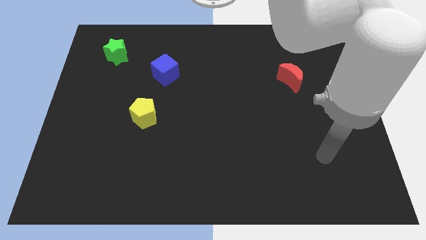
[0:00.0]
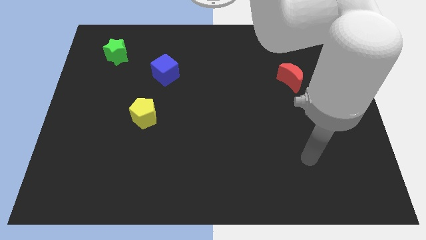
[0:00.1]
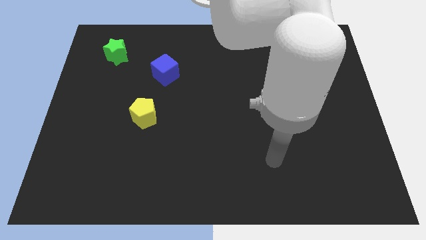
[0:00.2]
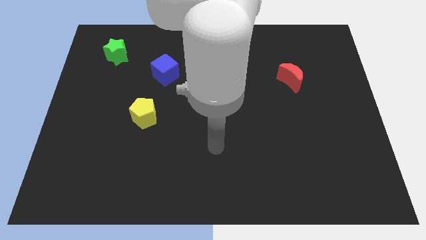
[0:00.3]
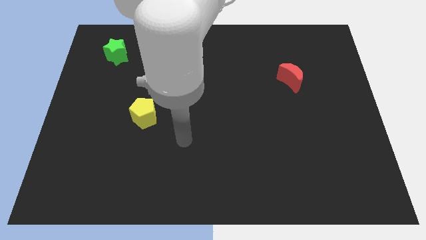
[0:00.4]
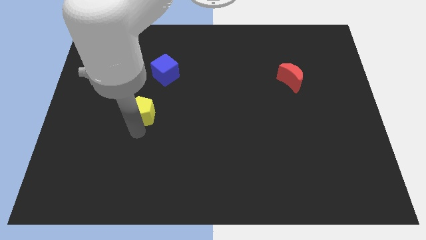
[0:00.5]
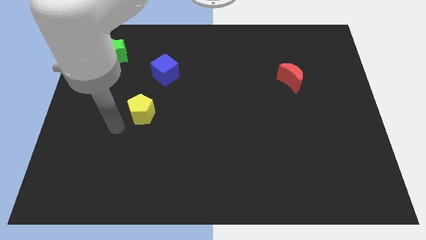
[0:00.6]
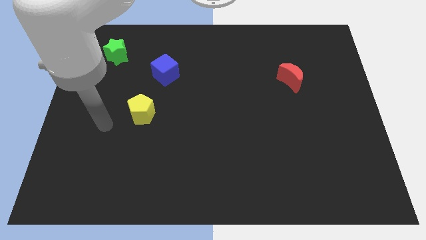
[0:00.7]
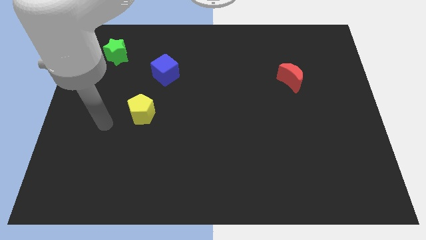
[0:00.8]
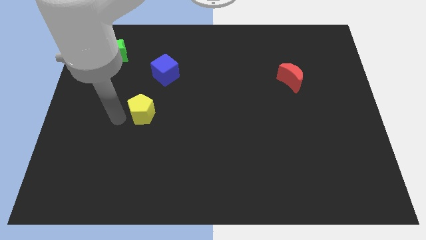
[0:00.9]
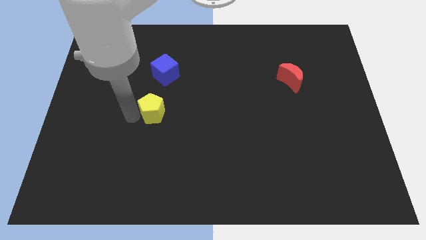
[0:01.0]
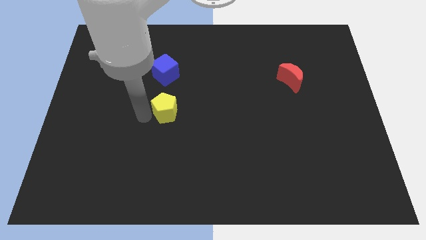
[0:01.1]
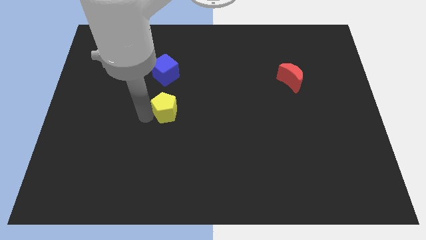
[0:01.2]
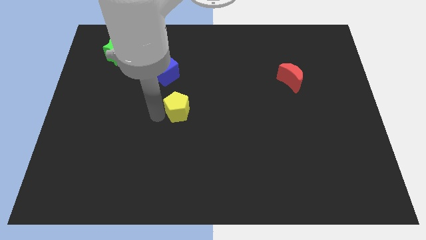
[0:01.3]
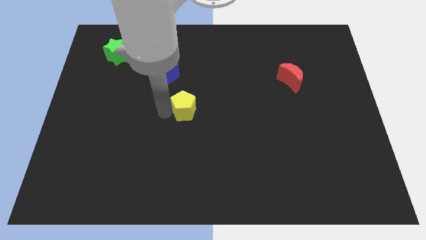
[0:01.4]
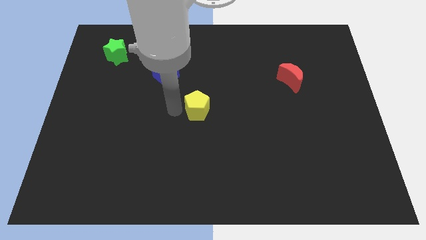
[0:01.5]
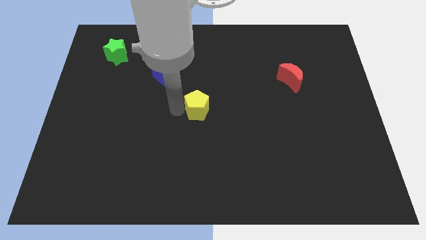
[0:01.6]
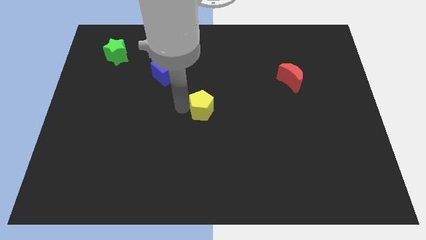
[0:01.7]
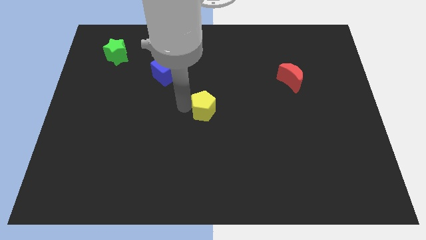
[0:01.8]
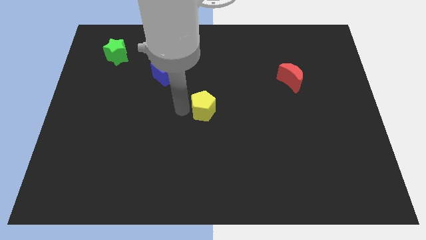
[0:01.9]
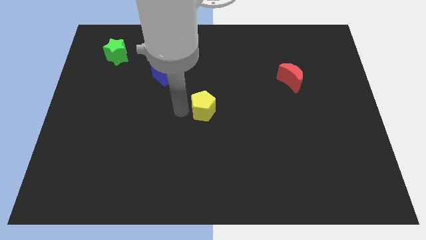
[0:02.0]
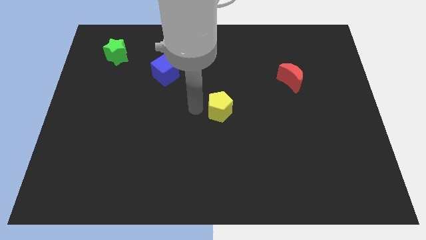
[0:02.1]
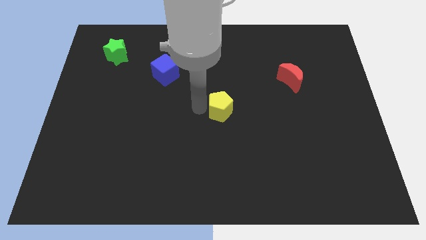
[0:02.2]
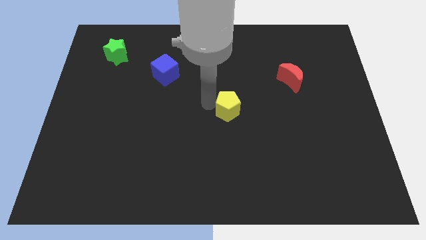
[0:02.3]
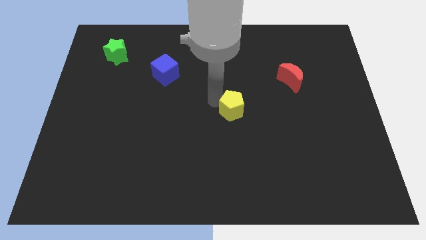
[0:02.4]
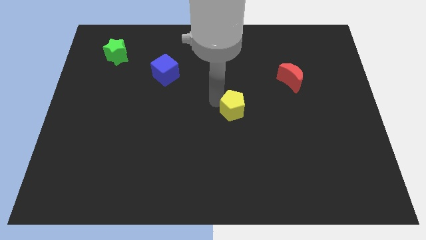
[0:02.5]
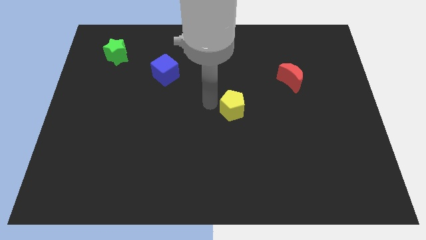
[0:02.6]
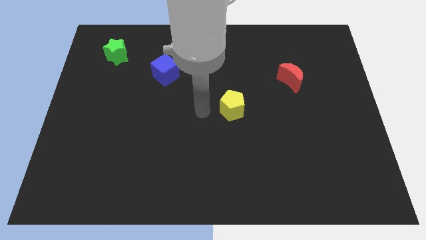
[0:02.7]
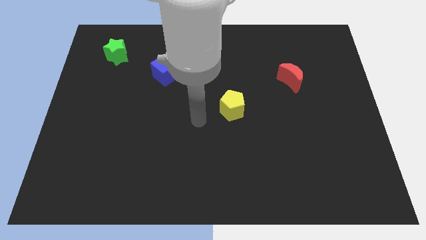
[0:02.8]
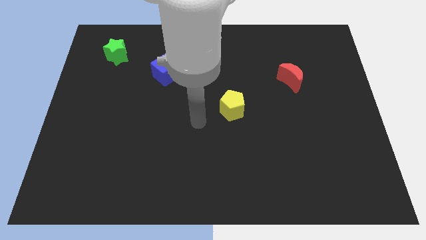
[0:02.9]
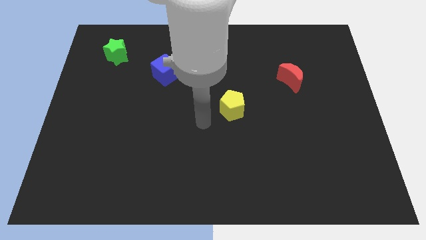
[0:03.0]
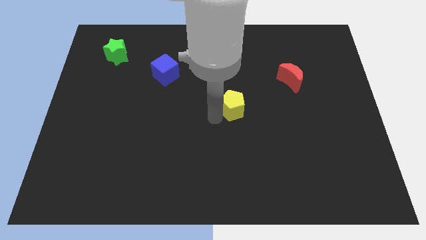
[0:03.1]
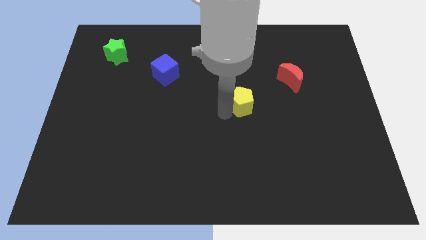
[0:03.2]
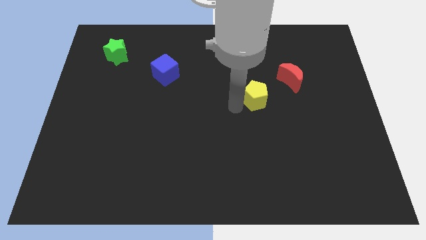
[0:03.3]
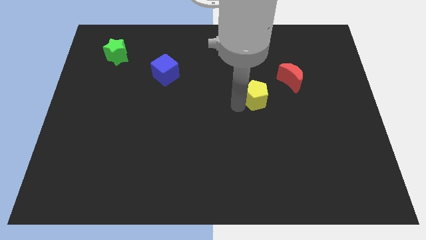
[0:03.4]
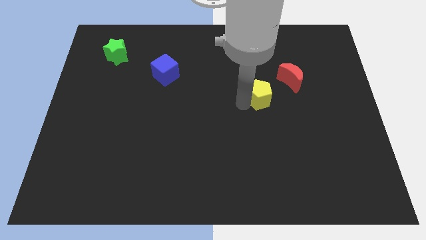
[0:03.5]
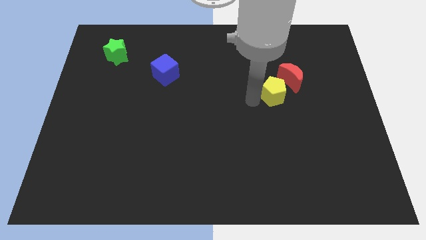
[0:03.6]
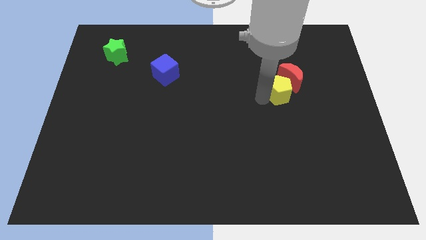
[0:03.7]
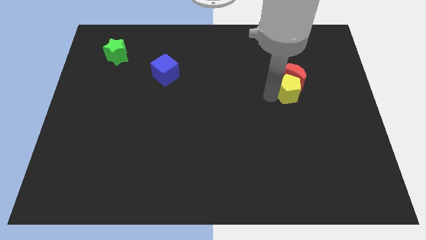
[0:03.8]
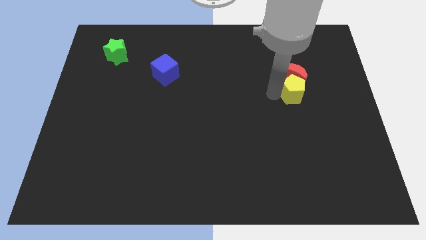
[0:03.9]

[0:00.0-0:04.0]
move the yellow block close to the red moon

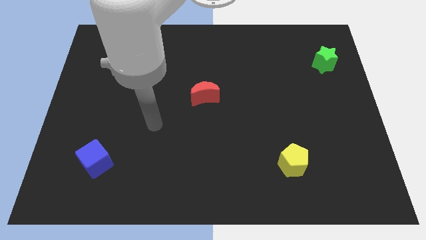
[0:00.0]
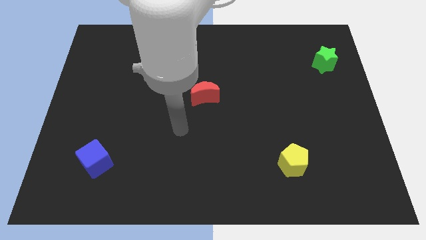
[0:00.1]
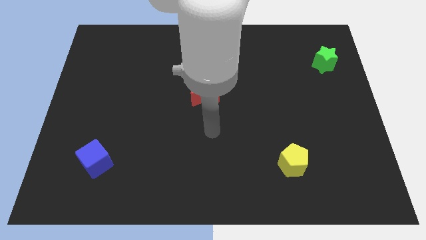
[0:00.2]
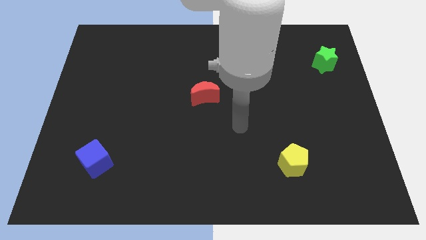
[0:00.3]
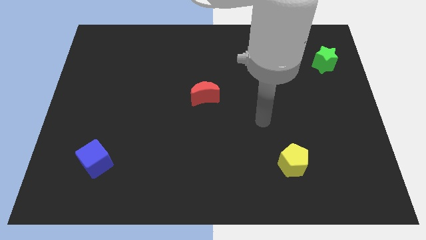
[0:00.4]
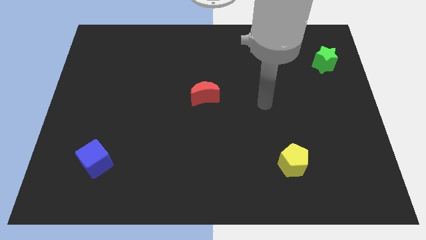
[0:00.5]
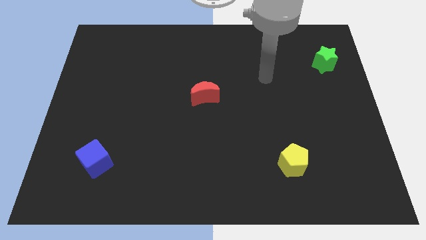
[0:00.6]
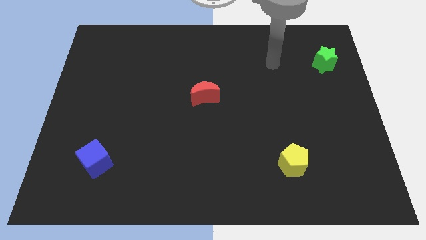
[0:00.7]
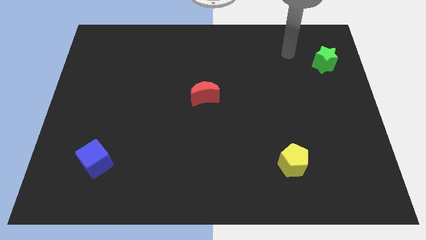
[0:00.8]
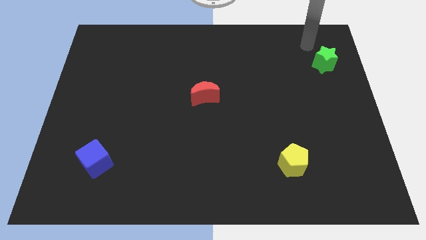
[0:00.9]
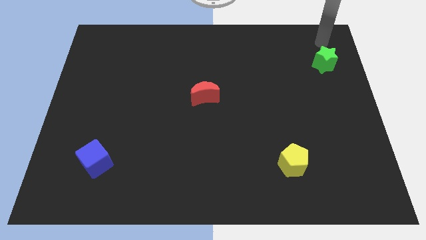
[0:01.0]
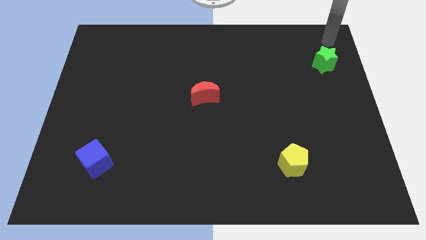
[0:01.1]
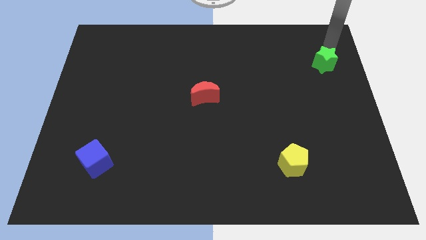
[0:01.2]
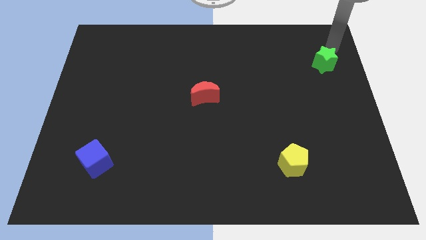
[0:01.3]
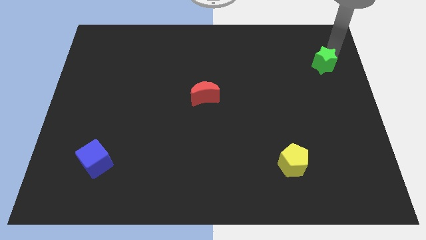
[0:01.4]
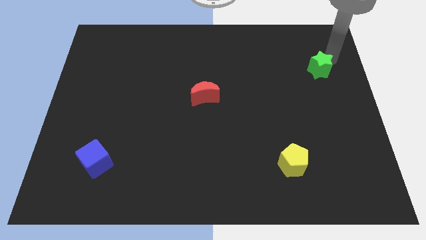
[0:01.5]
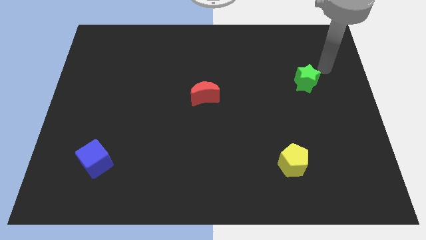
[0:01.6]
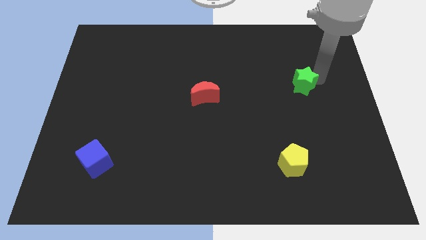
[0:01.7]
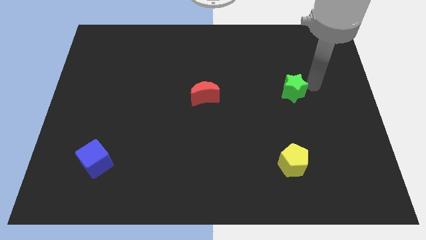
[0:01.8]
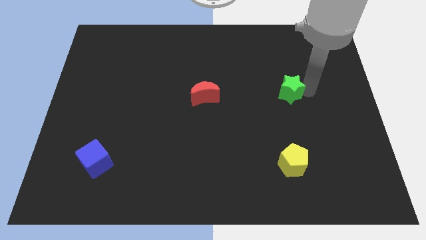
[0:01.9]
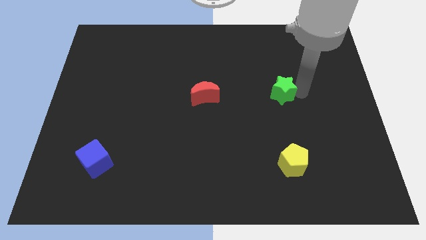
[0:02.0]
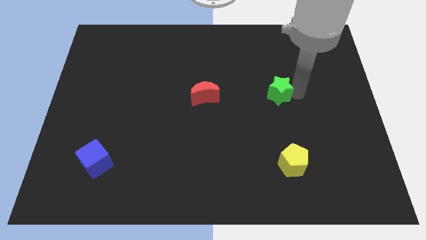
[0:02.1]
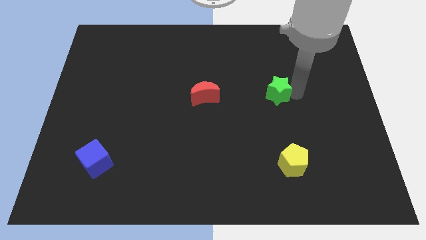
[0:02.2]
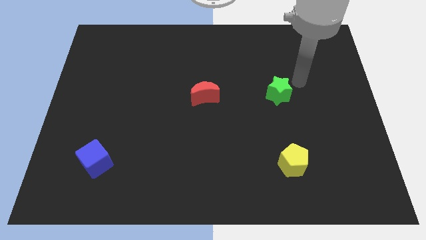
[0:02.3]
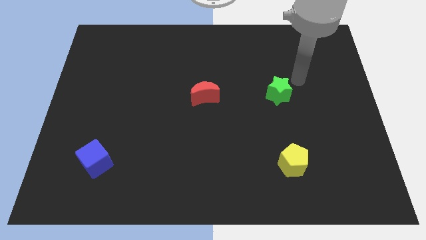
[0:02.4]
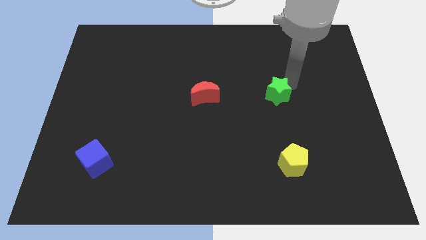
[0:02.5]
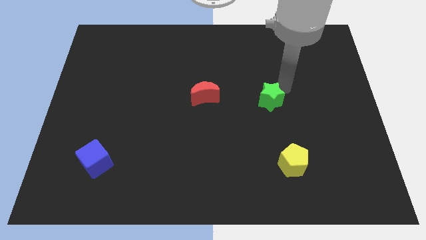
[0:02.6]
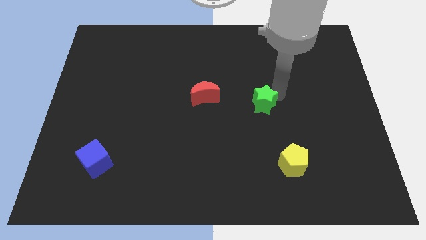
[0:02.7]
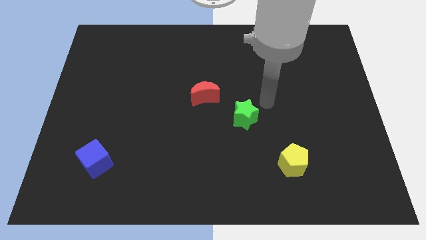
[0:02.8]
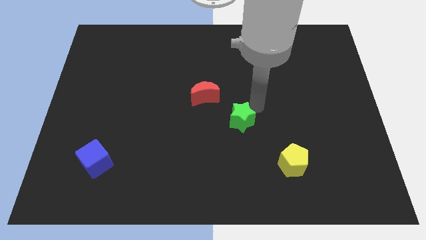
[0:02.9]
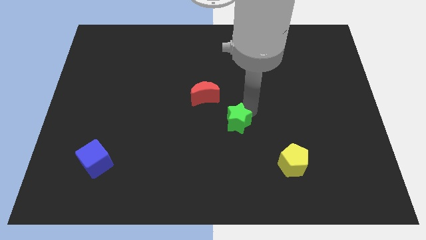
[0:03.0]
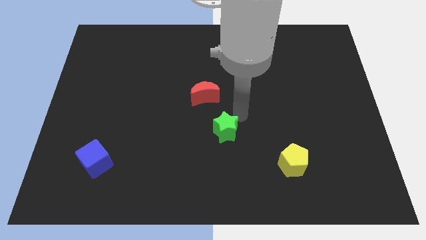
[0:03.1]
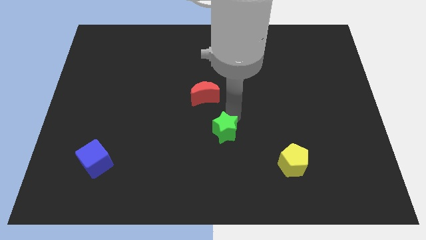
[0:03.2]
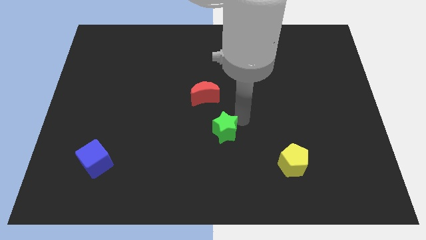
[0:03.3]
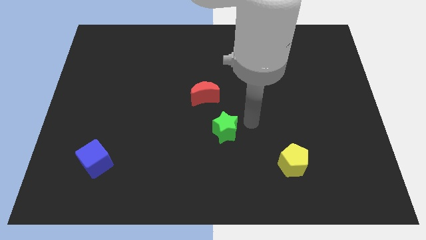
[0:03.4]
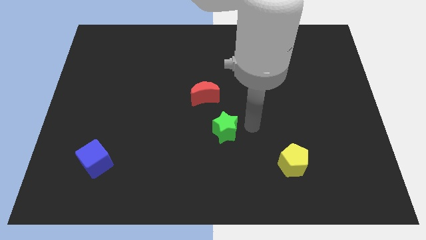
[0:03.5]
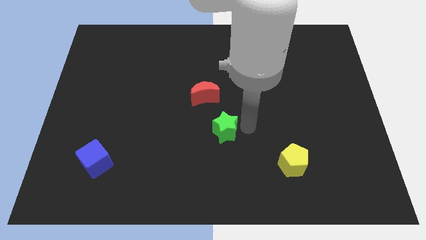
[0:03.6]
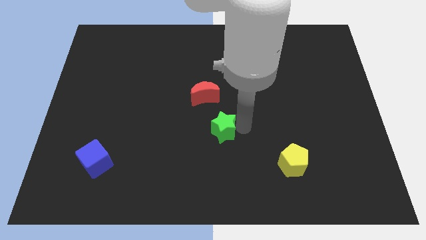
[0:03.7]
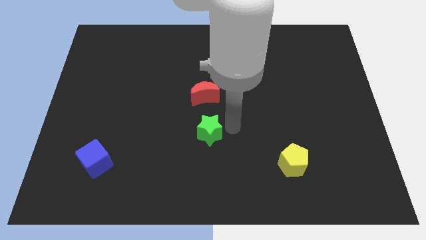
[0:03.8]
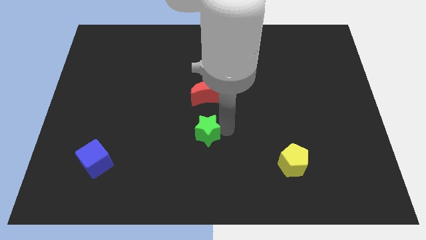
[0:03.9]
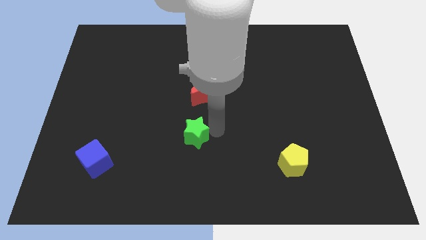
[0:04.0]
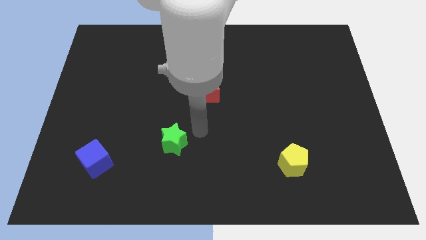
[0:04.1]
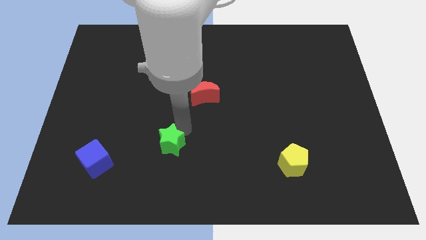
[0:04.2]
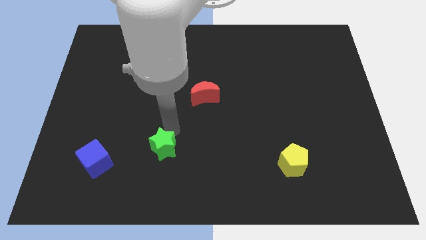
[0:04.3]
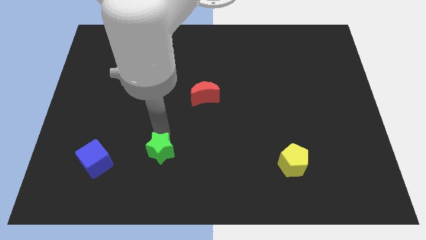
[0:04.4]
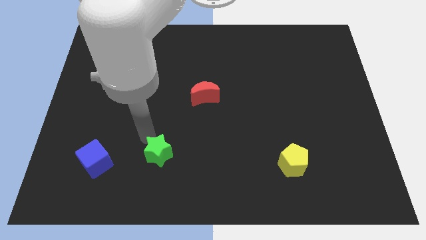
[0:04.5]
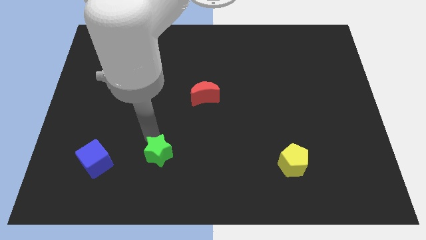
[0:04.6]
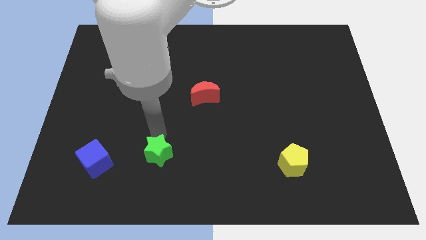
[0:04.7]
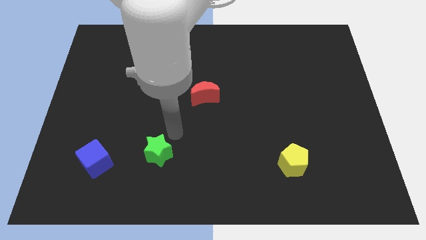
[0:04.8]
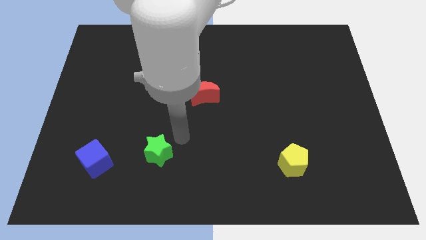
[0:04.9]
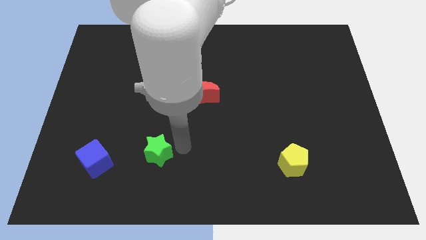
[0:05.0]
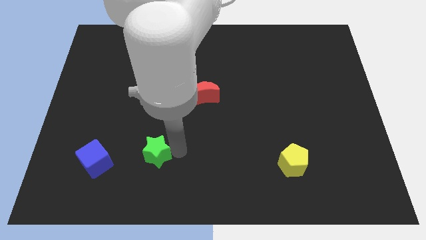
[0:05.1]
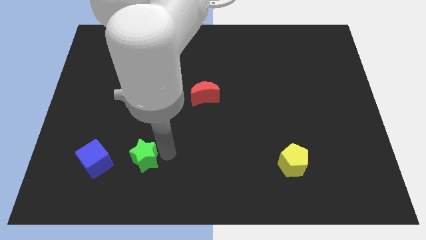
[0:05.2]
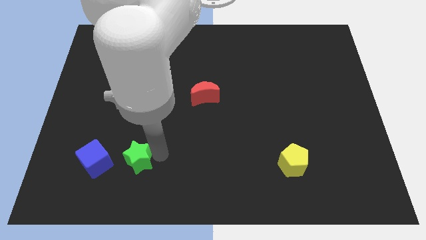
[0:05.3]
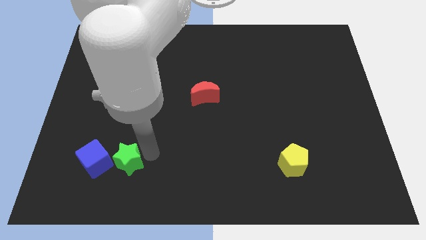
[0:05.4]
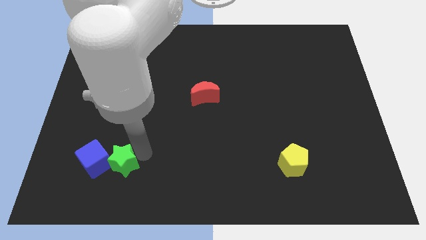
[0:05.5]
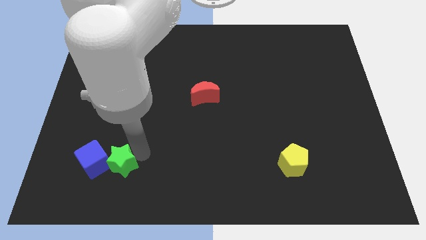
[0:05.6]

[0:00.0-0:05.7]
slide the star to the cube
